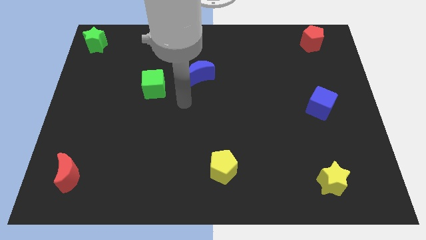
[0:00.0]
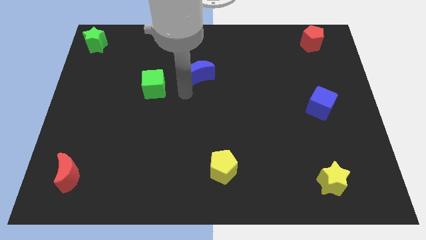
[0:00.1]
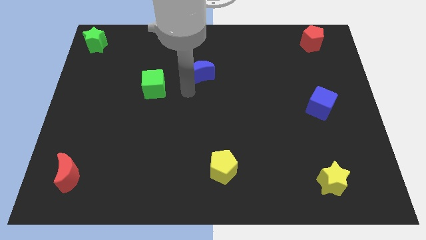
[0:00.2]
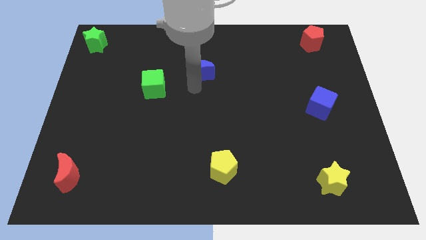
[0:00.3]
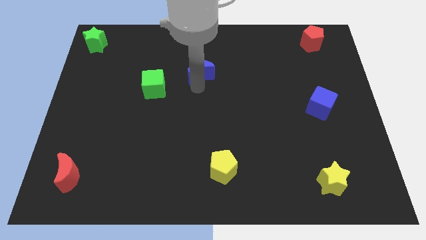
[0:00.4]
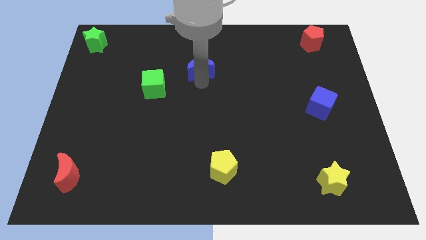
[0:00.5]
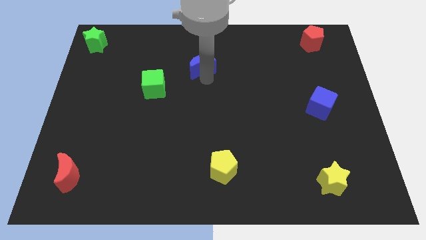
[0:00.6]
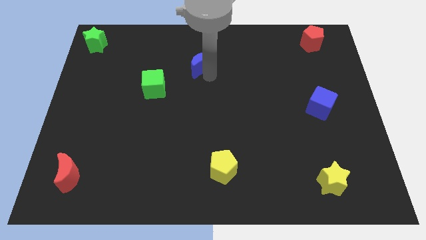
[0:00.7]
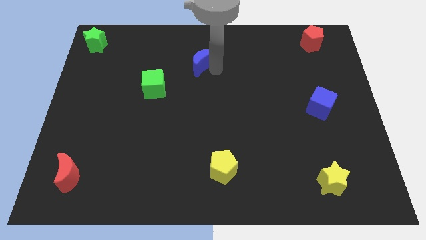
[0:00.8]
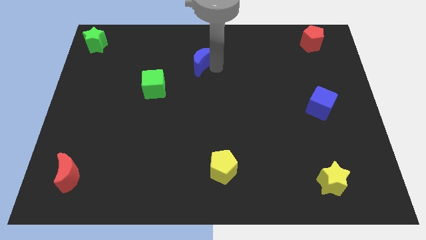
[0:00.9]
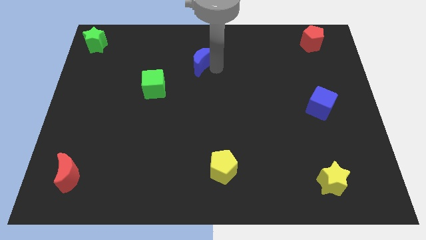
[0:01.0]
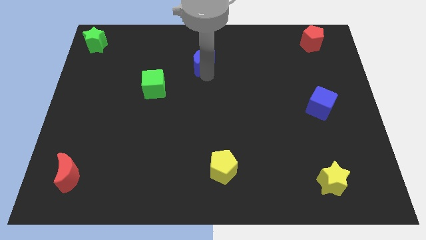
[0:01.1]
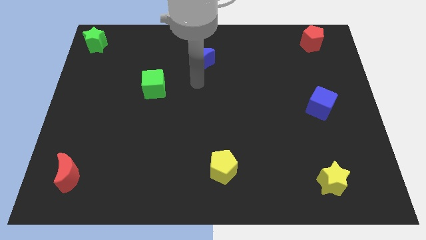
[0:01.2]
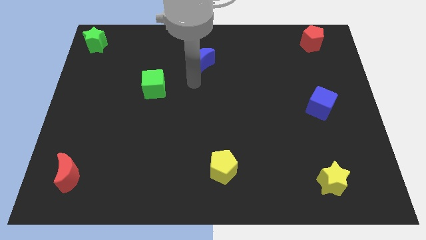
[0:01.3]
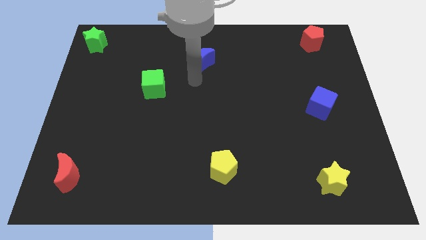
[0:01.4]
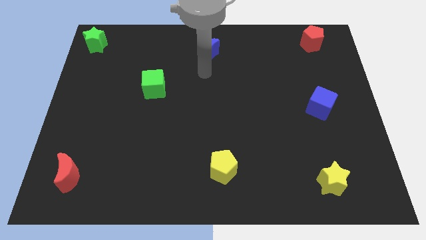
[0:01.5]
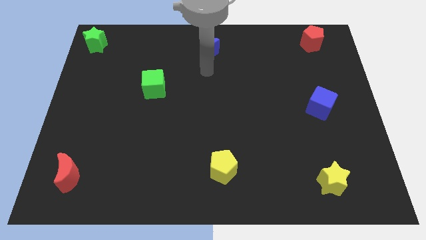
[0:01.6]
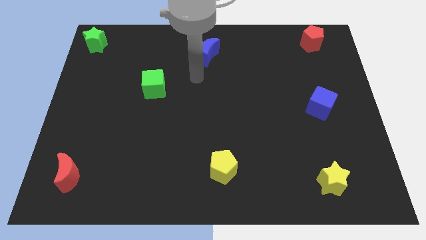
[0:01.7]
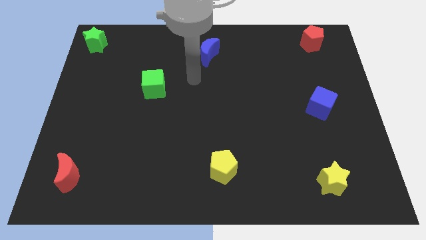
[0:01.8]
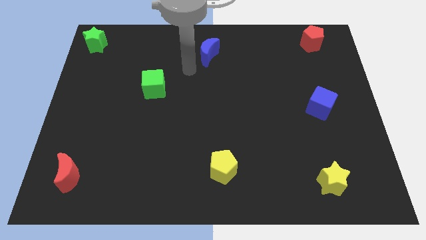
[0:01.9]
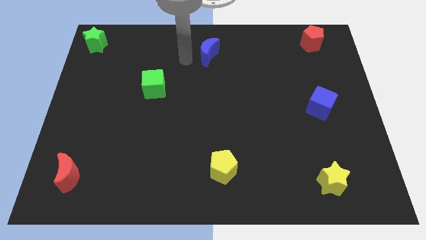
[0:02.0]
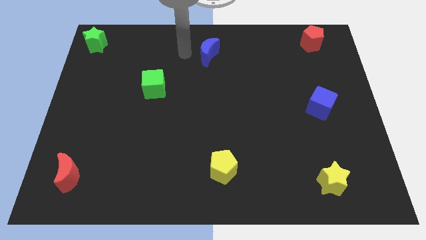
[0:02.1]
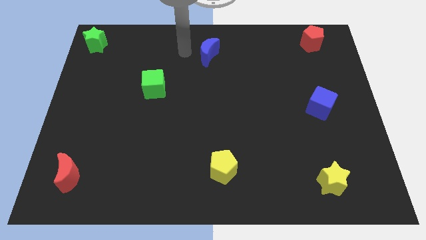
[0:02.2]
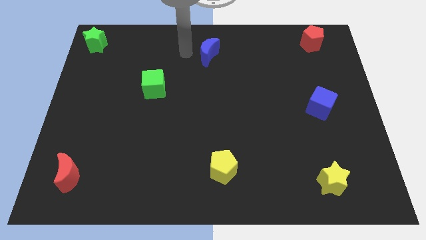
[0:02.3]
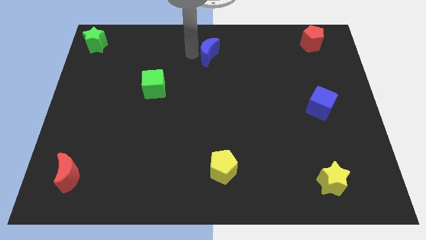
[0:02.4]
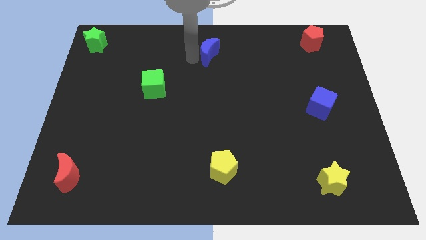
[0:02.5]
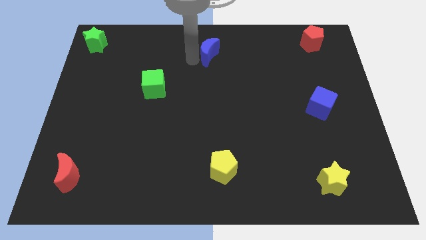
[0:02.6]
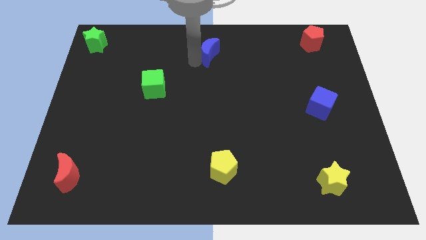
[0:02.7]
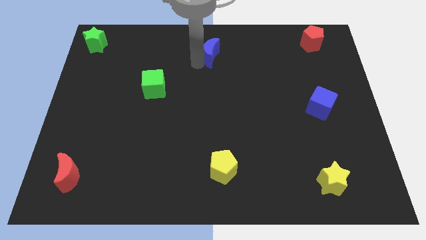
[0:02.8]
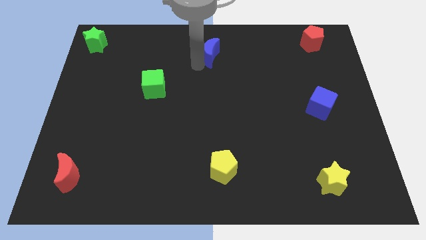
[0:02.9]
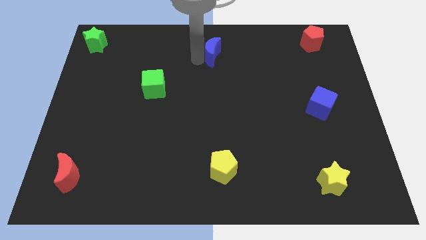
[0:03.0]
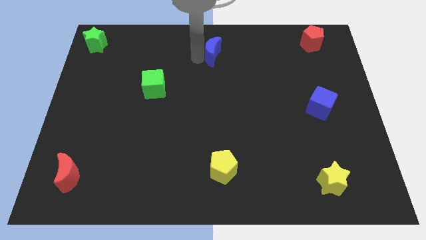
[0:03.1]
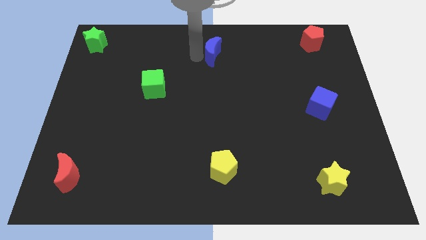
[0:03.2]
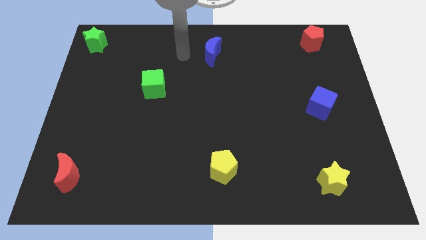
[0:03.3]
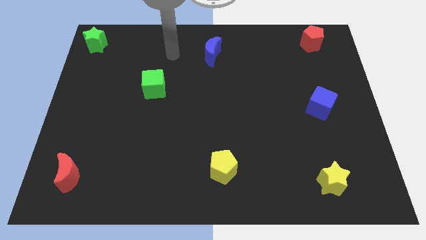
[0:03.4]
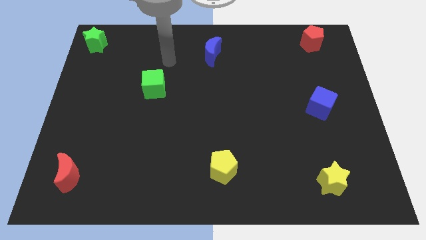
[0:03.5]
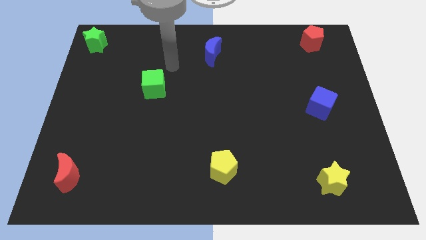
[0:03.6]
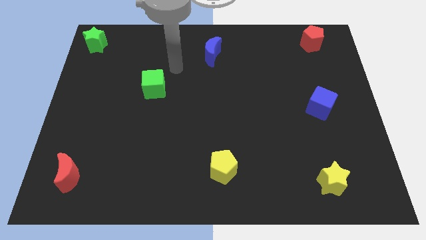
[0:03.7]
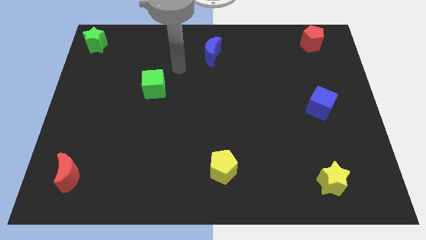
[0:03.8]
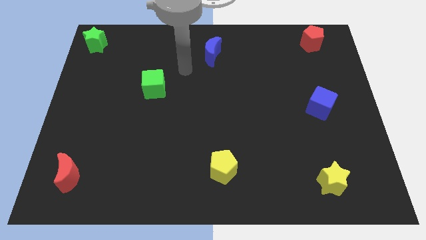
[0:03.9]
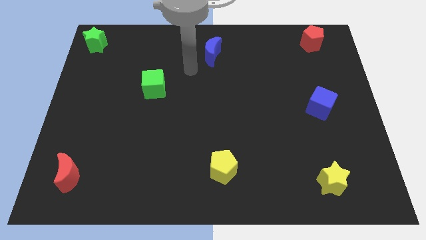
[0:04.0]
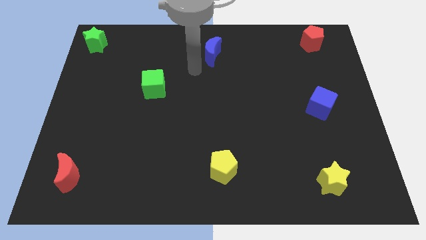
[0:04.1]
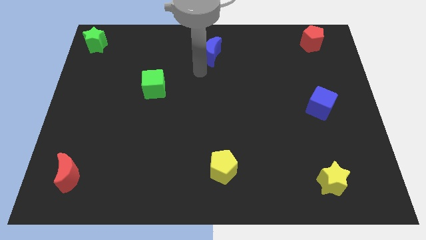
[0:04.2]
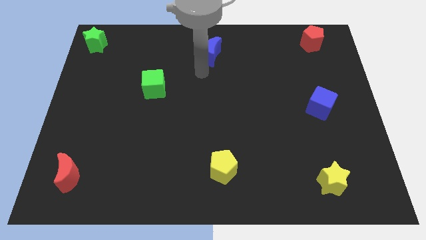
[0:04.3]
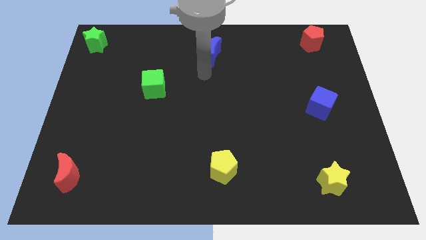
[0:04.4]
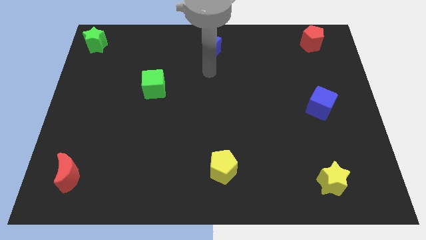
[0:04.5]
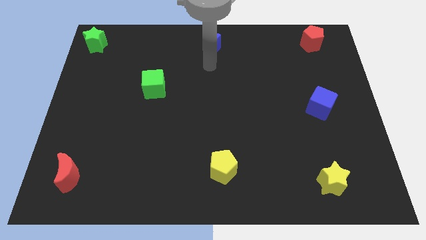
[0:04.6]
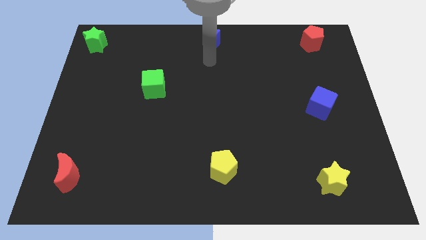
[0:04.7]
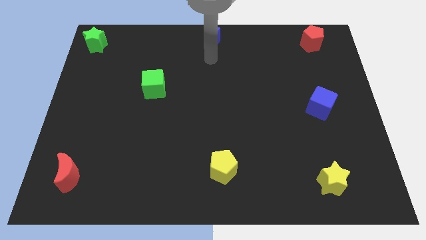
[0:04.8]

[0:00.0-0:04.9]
push the blue crescent towards the top center of the board

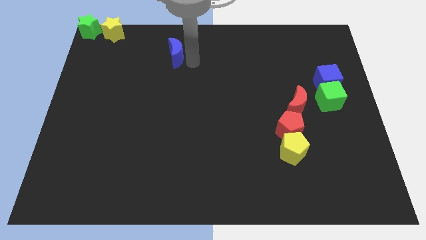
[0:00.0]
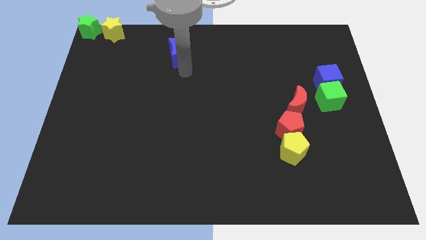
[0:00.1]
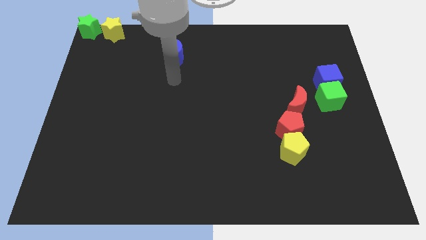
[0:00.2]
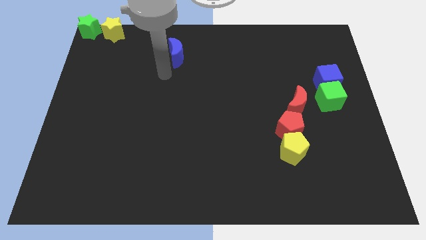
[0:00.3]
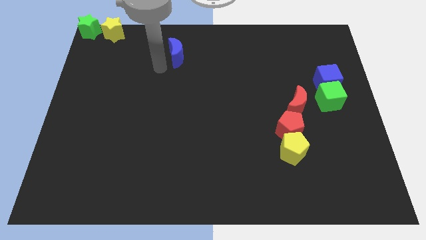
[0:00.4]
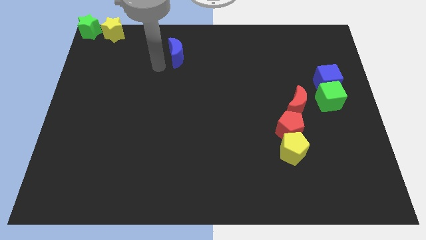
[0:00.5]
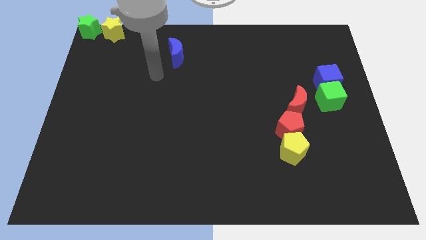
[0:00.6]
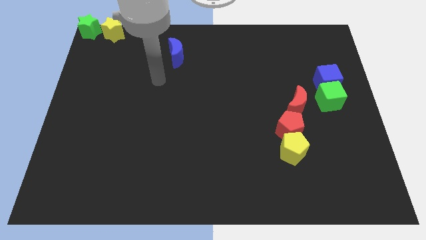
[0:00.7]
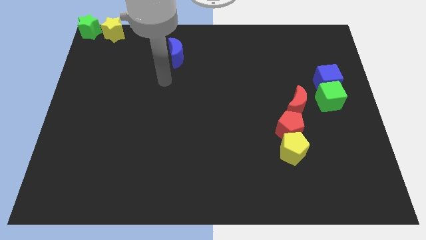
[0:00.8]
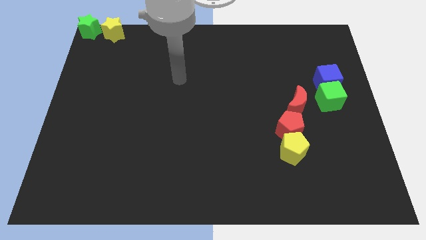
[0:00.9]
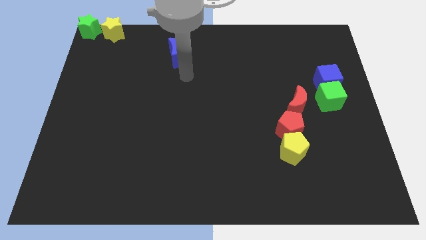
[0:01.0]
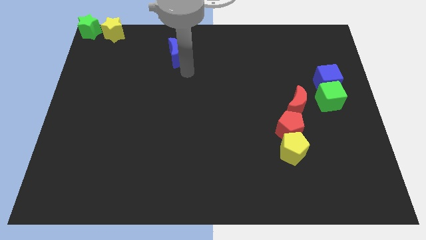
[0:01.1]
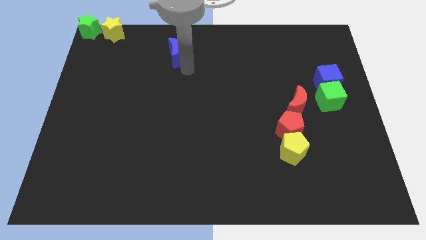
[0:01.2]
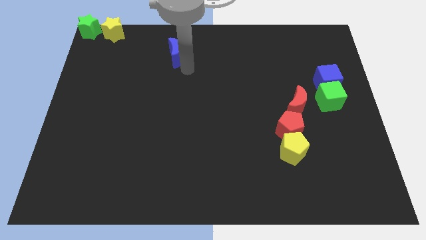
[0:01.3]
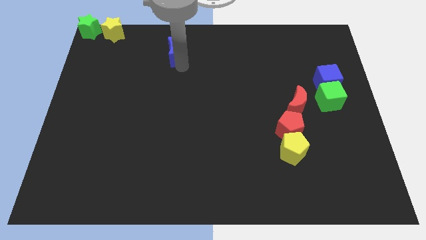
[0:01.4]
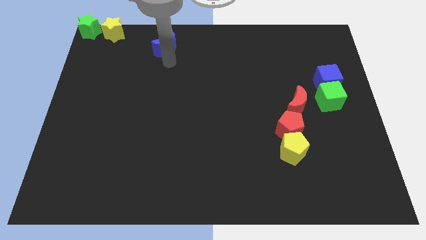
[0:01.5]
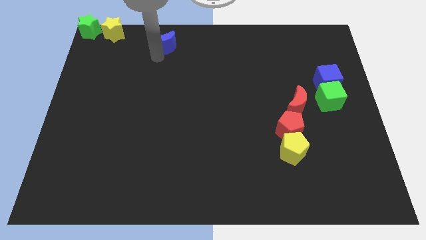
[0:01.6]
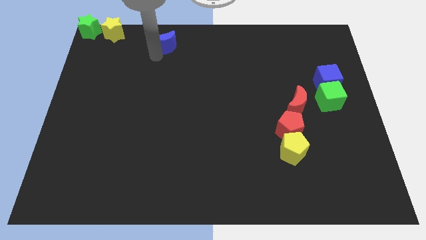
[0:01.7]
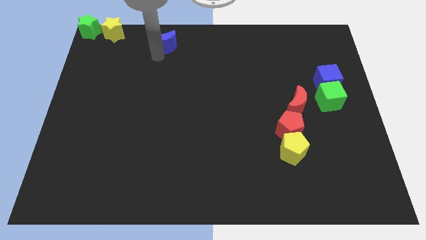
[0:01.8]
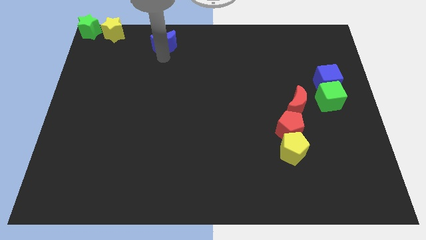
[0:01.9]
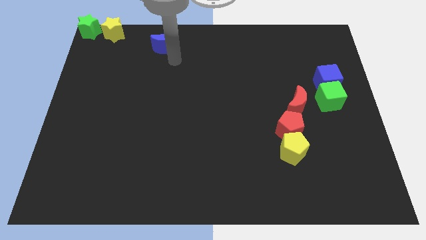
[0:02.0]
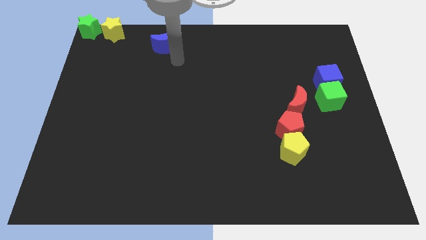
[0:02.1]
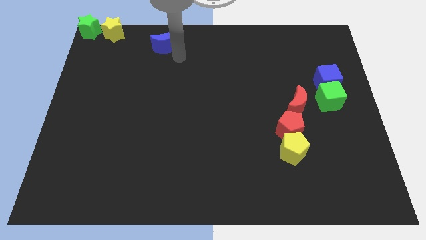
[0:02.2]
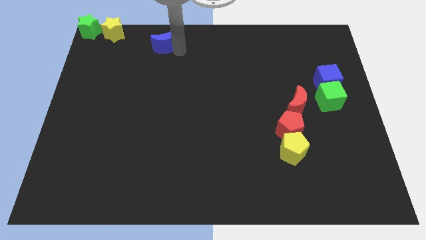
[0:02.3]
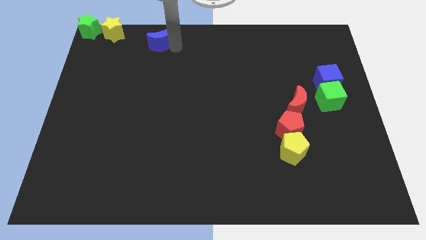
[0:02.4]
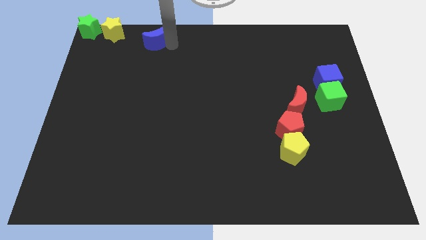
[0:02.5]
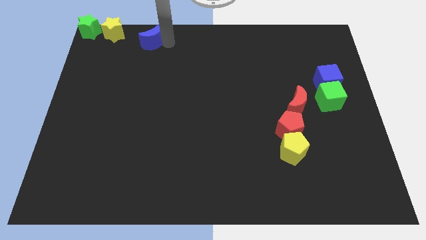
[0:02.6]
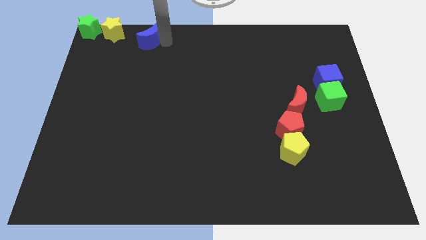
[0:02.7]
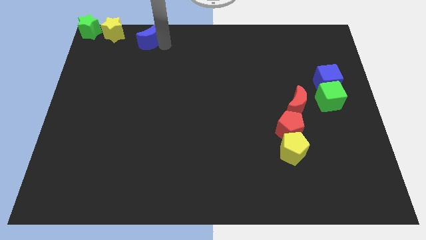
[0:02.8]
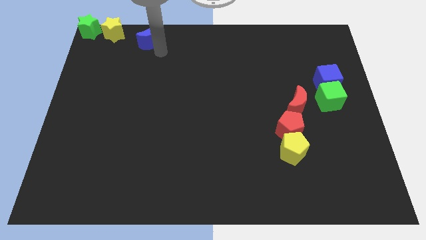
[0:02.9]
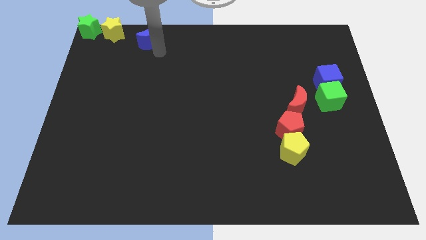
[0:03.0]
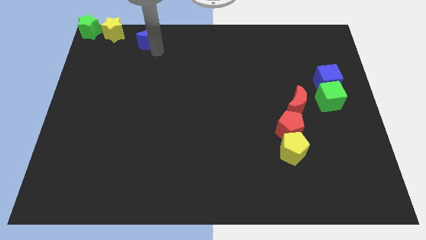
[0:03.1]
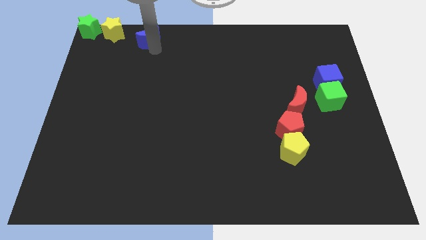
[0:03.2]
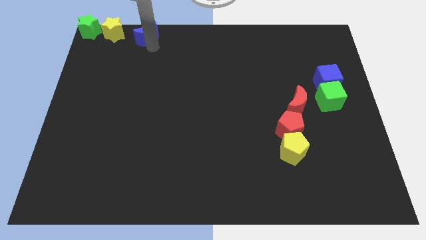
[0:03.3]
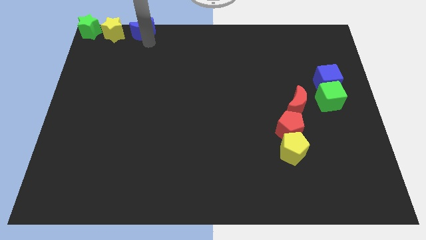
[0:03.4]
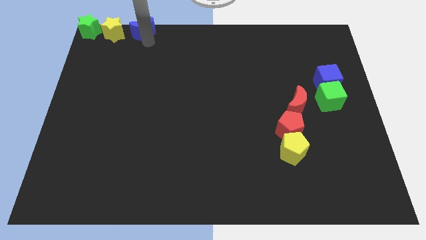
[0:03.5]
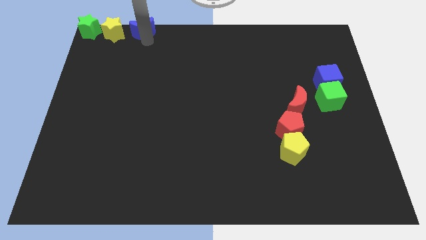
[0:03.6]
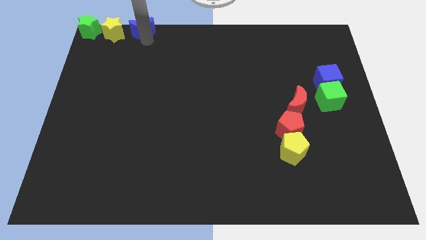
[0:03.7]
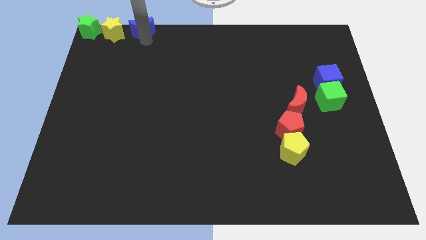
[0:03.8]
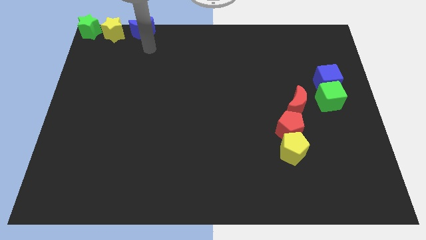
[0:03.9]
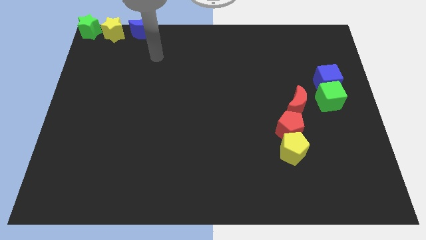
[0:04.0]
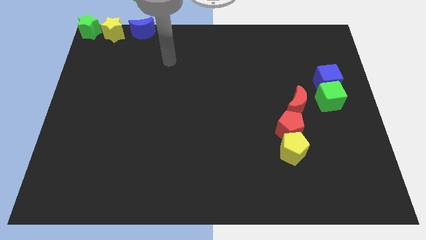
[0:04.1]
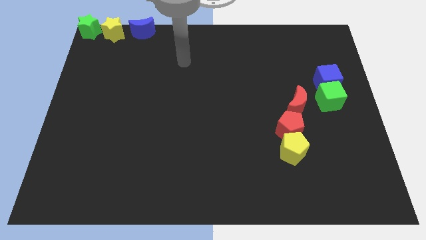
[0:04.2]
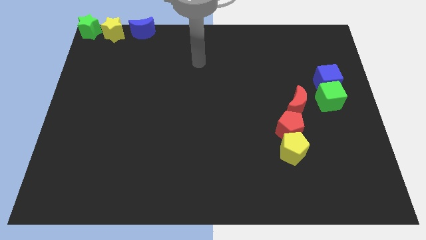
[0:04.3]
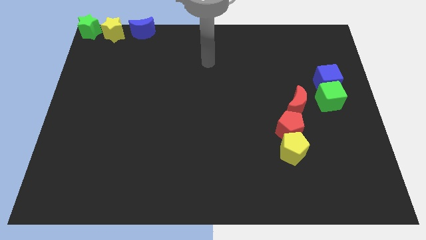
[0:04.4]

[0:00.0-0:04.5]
move the blue moon to the right side of the yellow star
